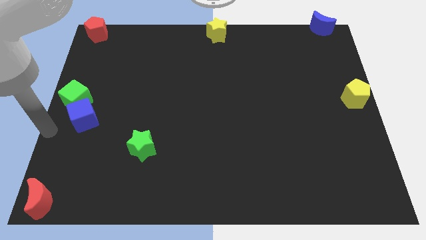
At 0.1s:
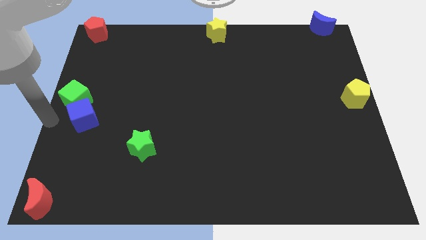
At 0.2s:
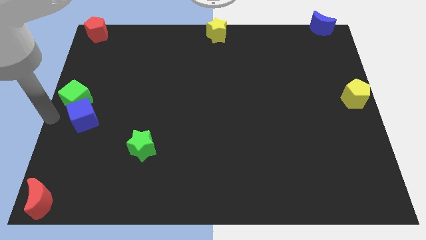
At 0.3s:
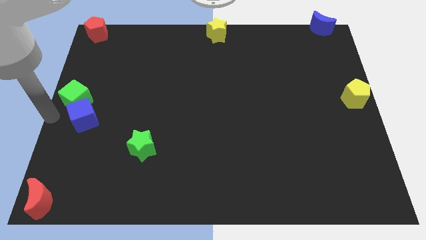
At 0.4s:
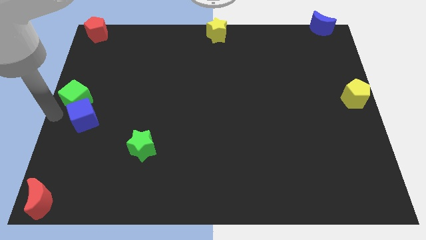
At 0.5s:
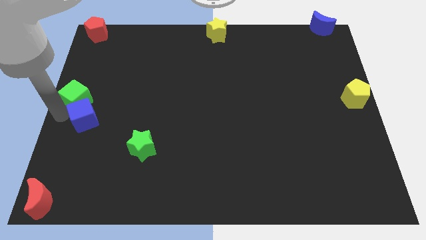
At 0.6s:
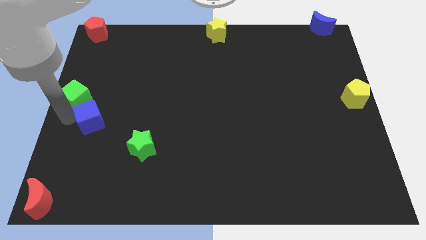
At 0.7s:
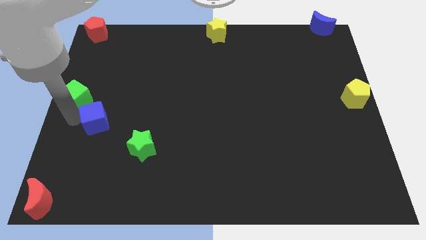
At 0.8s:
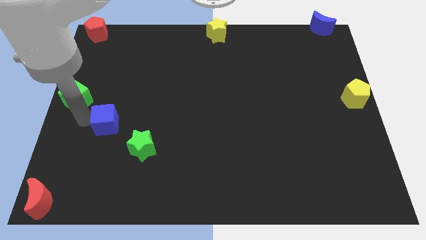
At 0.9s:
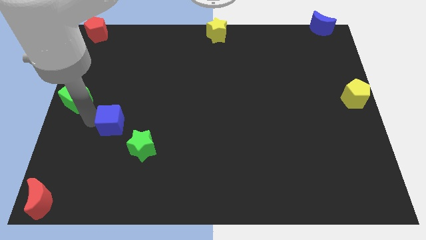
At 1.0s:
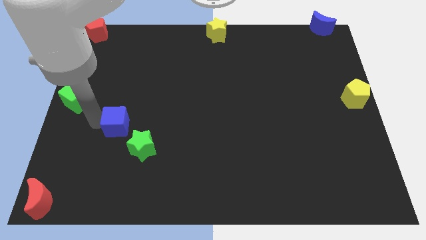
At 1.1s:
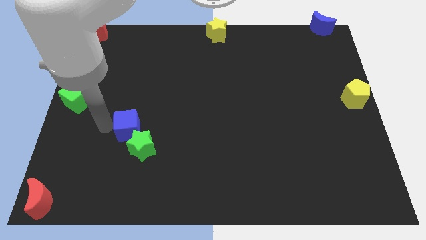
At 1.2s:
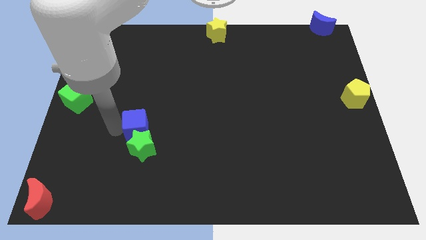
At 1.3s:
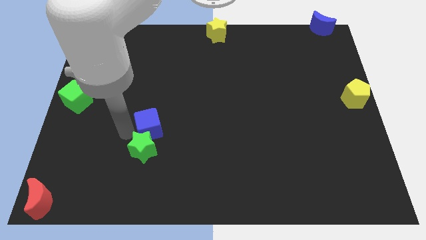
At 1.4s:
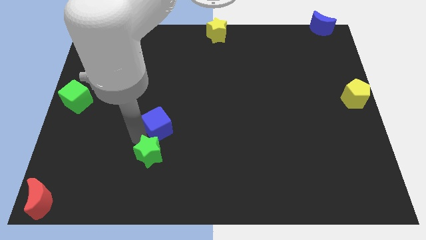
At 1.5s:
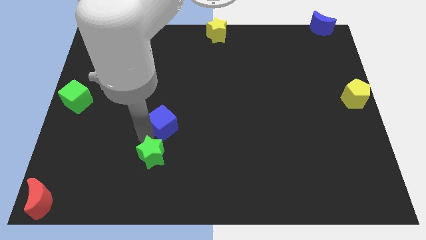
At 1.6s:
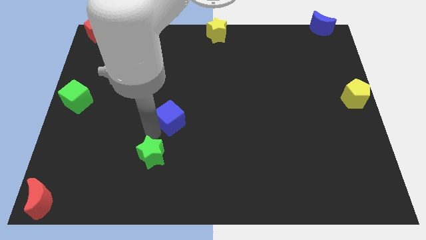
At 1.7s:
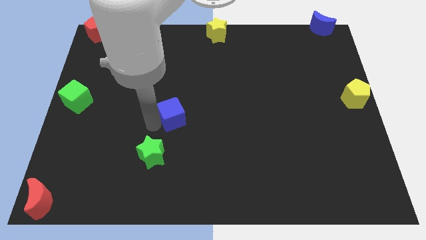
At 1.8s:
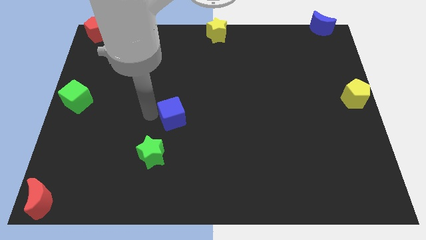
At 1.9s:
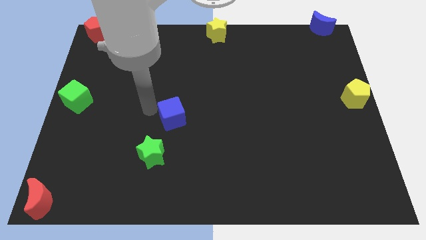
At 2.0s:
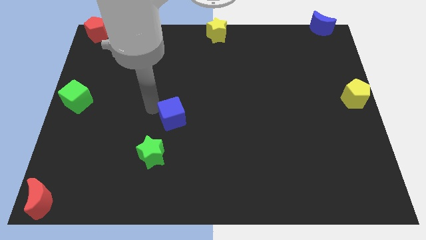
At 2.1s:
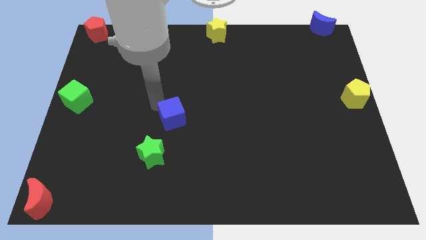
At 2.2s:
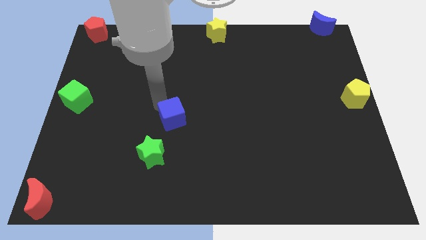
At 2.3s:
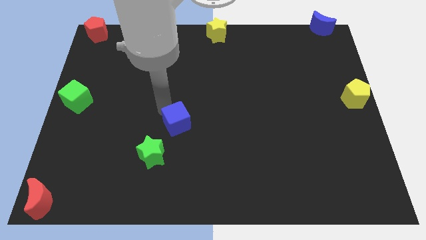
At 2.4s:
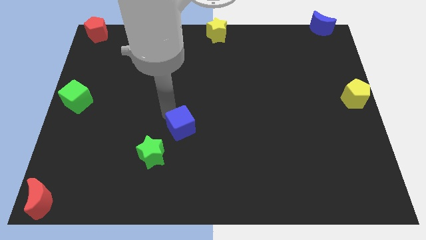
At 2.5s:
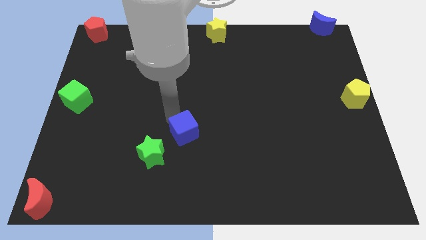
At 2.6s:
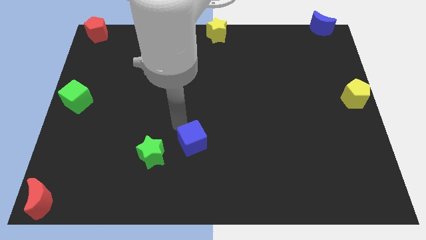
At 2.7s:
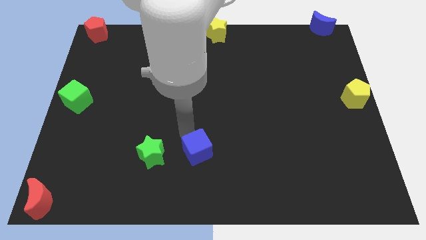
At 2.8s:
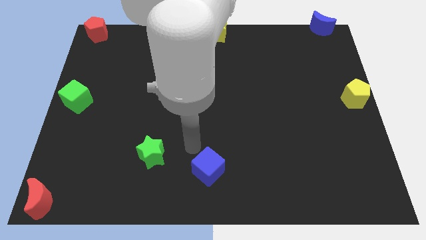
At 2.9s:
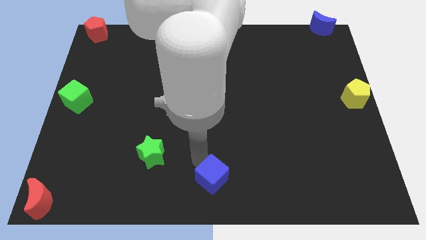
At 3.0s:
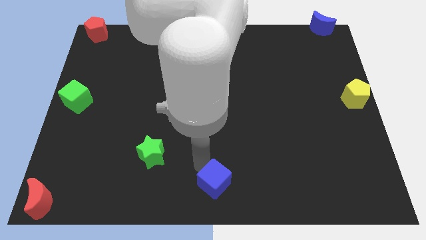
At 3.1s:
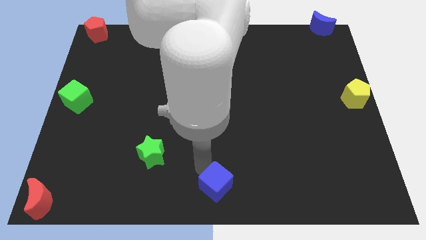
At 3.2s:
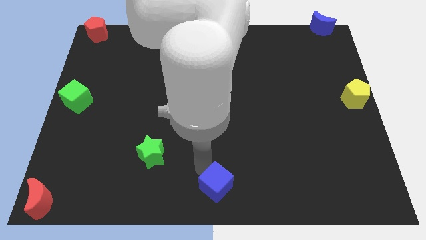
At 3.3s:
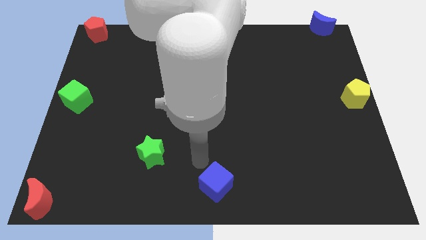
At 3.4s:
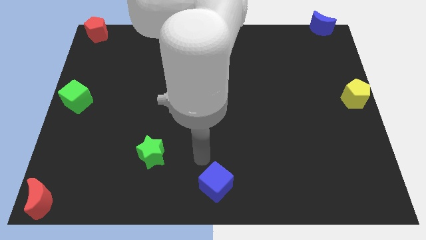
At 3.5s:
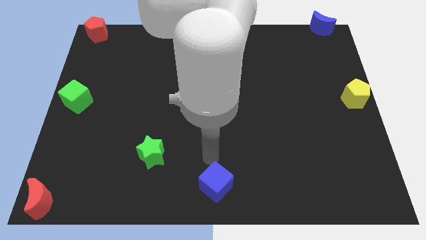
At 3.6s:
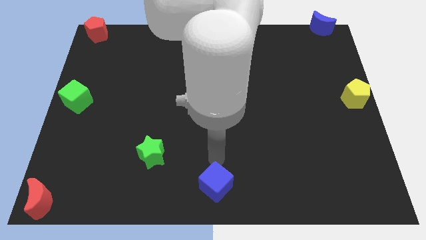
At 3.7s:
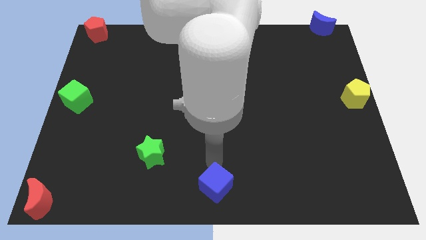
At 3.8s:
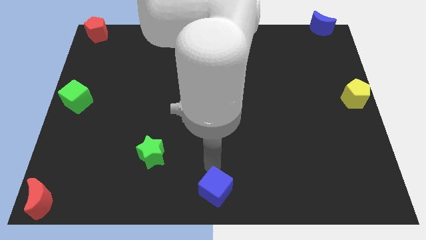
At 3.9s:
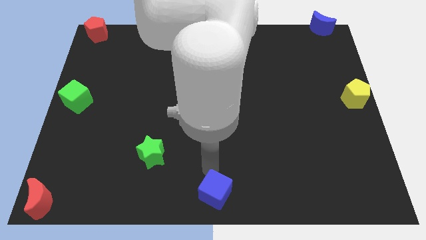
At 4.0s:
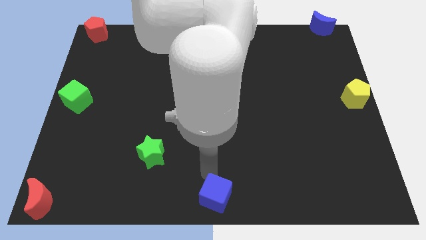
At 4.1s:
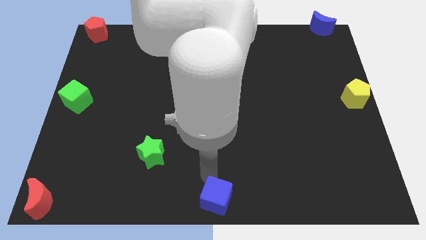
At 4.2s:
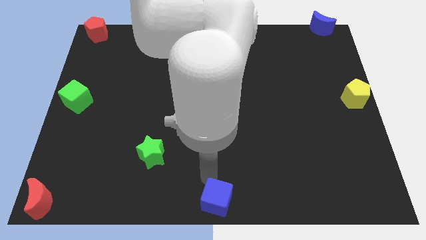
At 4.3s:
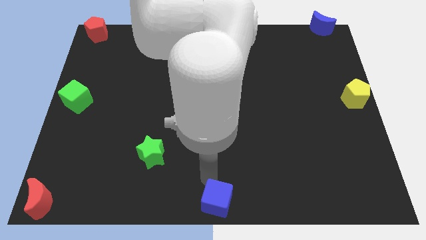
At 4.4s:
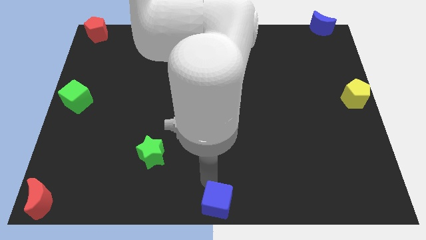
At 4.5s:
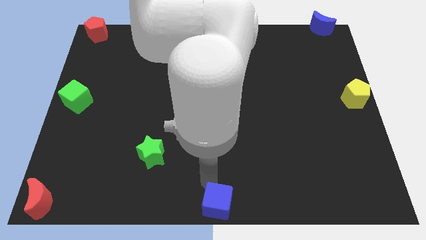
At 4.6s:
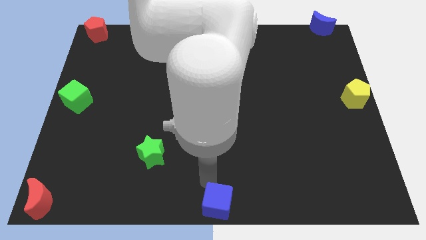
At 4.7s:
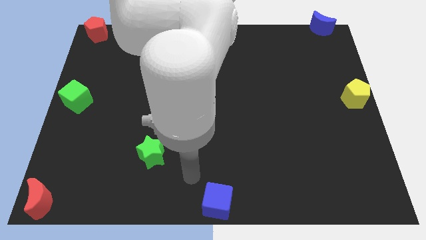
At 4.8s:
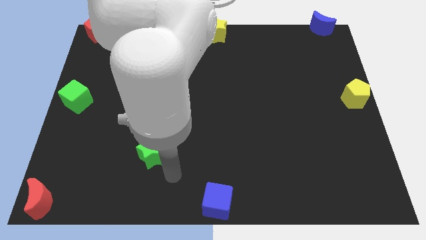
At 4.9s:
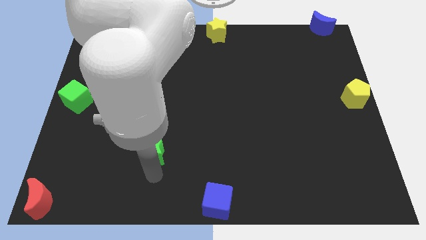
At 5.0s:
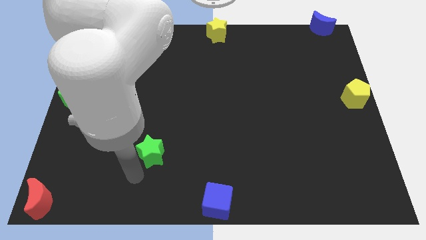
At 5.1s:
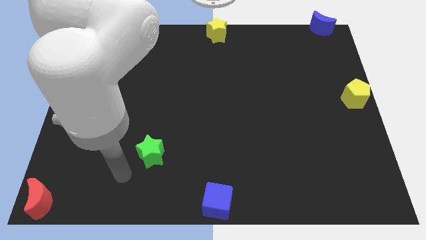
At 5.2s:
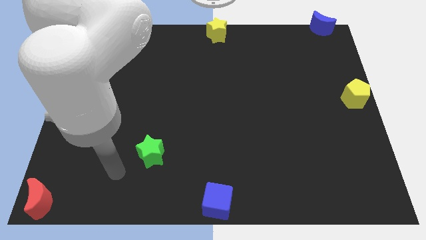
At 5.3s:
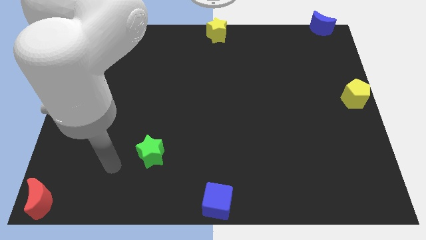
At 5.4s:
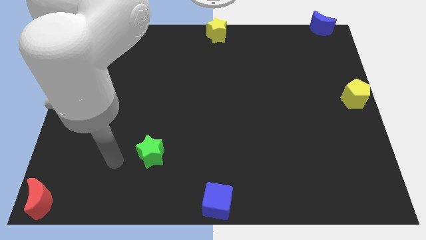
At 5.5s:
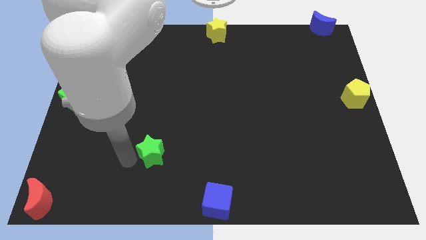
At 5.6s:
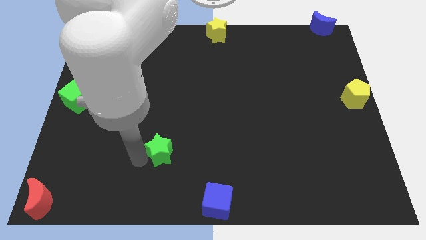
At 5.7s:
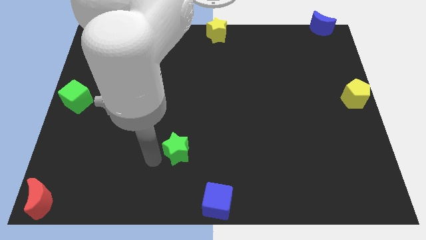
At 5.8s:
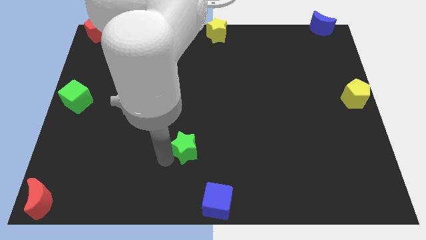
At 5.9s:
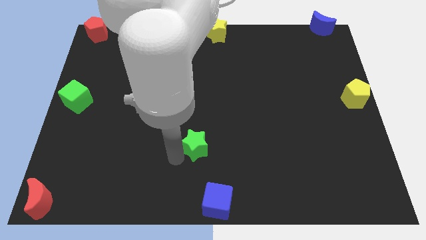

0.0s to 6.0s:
drag the blue cube to the bottom center of the board

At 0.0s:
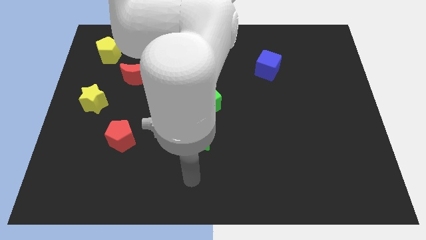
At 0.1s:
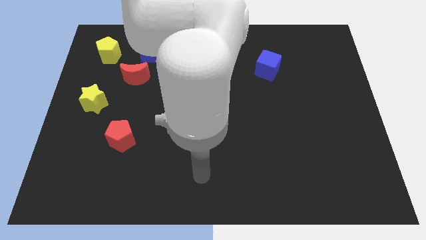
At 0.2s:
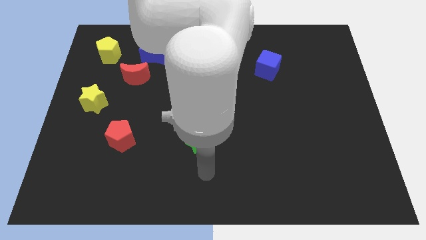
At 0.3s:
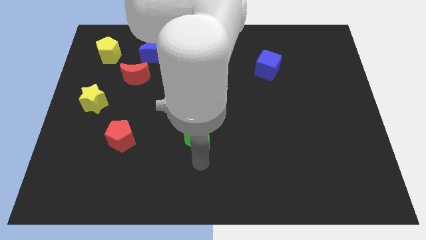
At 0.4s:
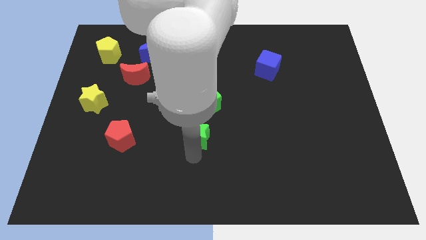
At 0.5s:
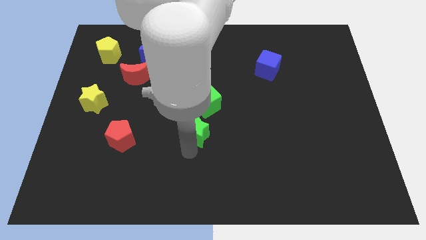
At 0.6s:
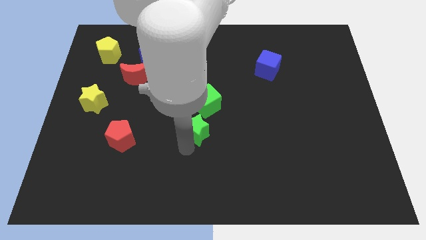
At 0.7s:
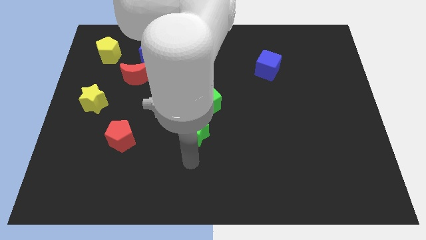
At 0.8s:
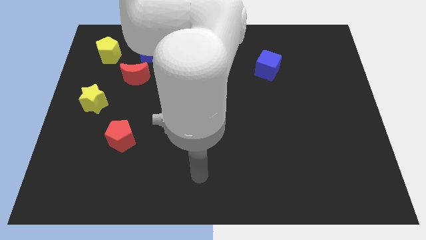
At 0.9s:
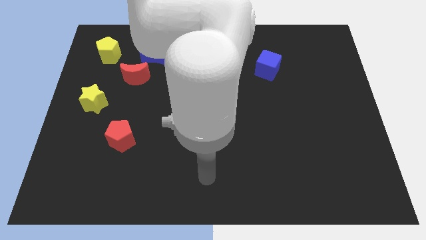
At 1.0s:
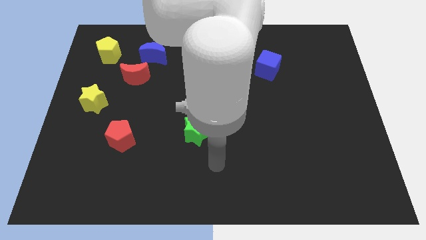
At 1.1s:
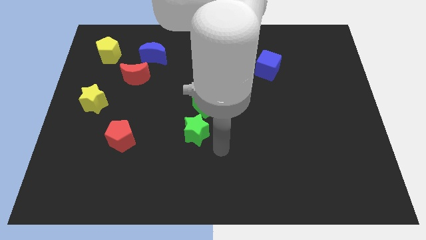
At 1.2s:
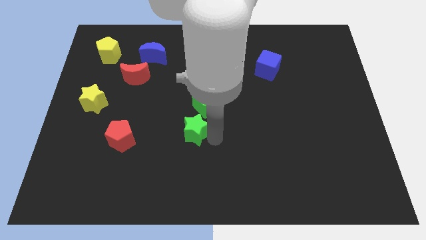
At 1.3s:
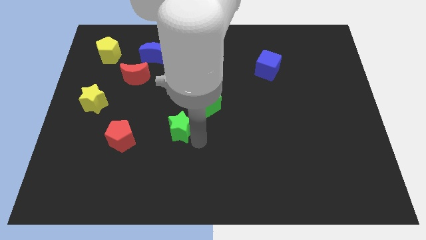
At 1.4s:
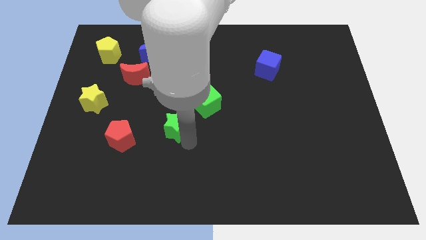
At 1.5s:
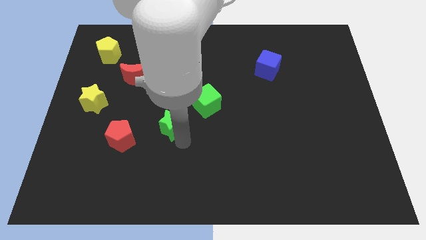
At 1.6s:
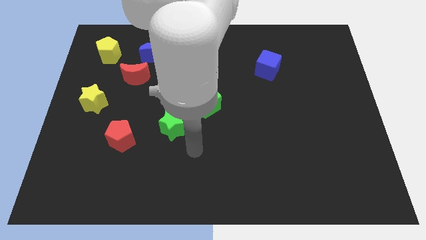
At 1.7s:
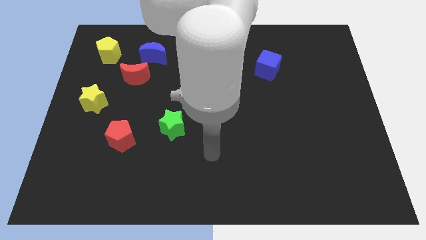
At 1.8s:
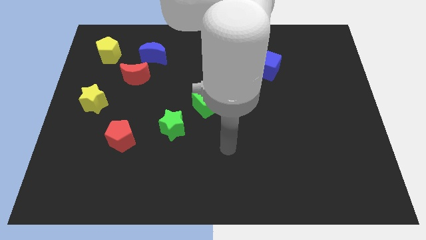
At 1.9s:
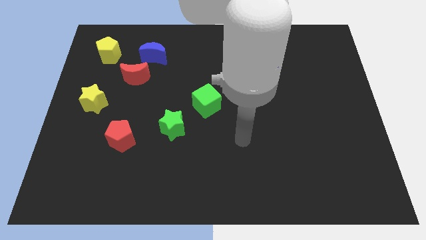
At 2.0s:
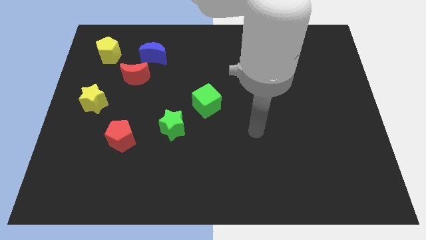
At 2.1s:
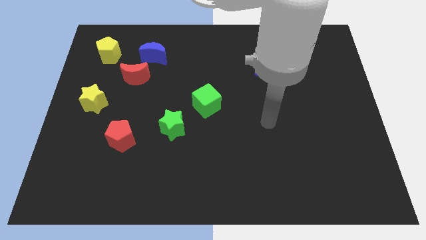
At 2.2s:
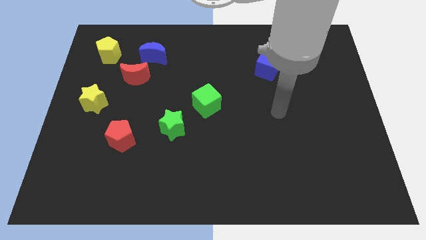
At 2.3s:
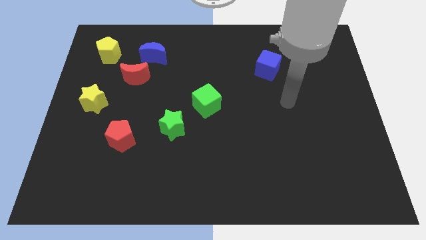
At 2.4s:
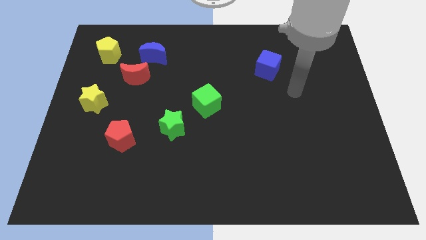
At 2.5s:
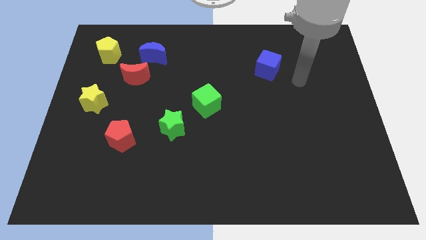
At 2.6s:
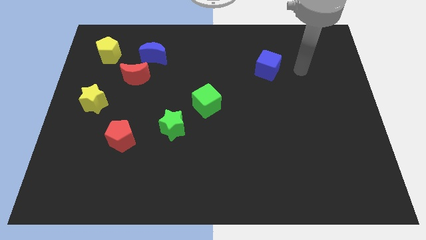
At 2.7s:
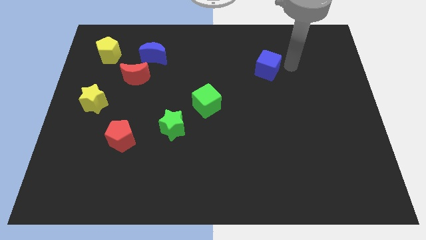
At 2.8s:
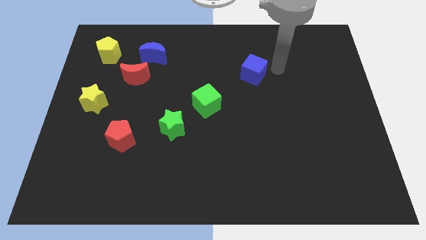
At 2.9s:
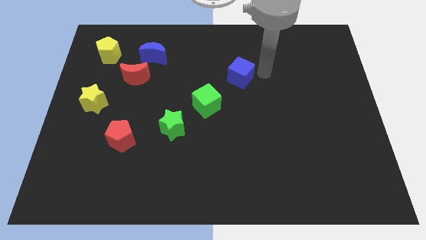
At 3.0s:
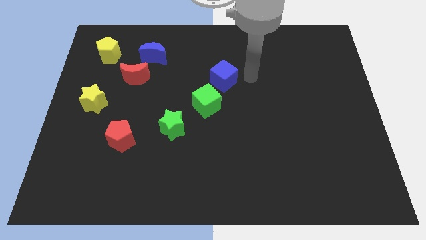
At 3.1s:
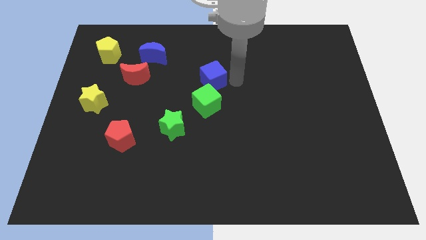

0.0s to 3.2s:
move the blue cube above the green cube
